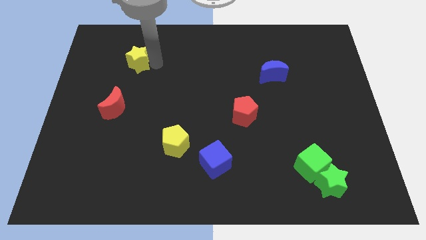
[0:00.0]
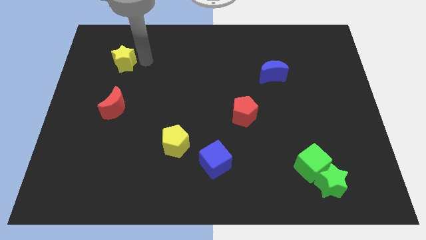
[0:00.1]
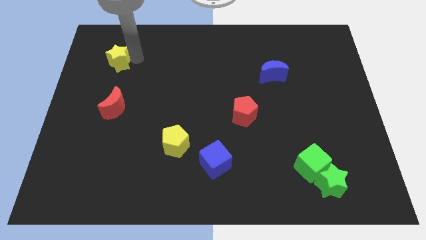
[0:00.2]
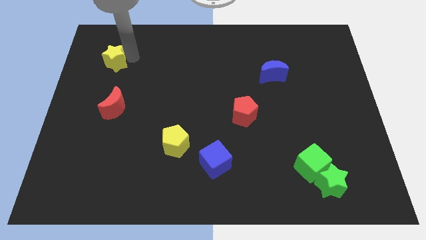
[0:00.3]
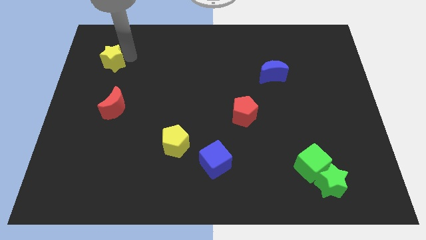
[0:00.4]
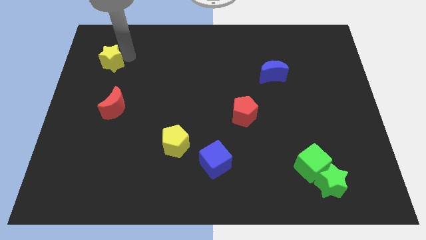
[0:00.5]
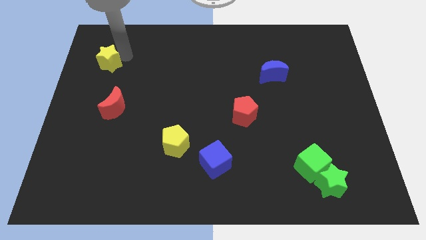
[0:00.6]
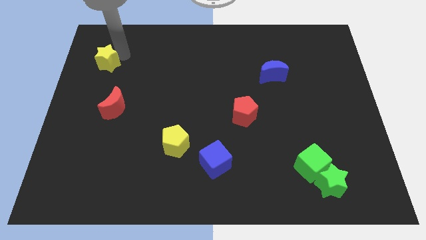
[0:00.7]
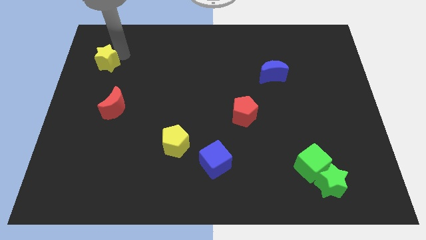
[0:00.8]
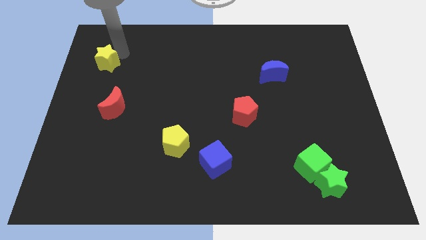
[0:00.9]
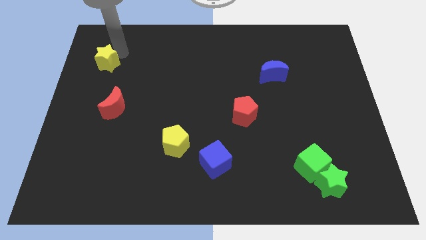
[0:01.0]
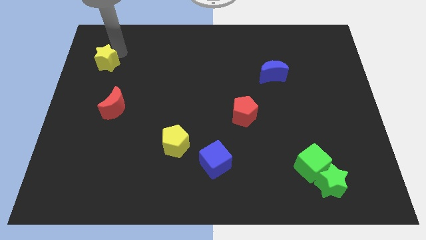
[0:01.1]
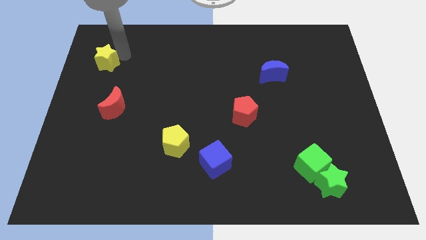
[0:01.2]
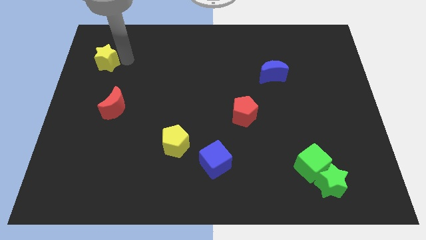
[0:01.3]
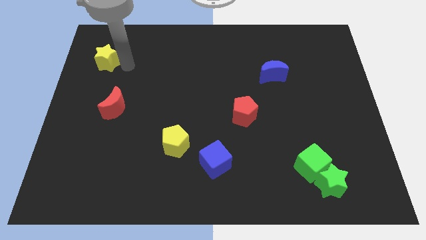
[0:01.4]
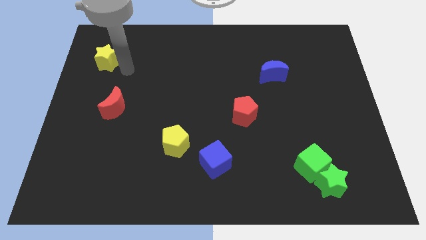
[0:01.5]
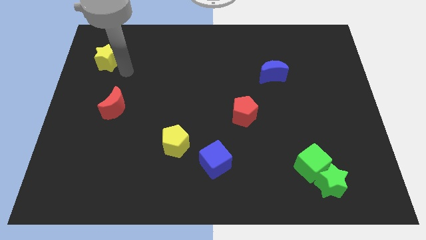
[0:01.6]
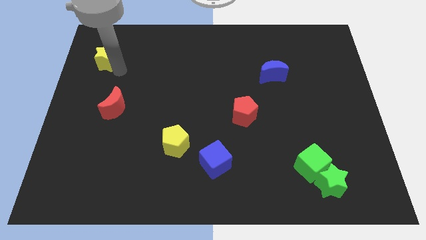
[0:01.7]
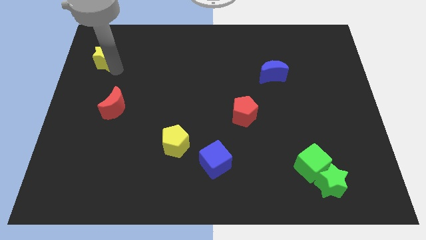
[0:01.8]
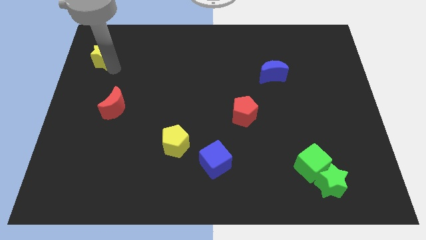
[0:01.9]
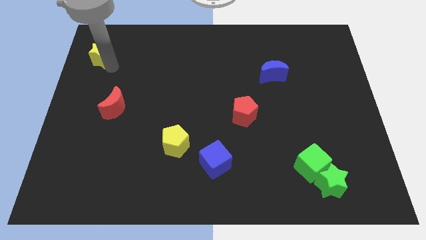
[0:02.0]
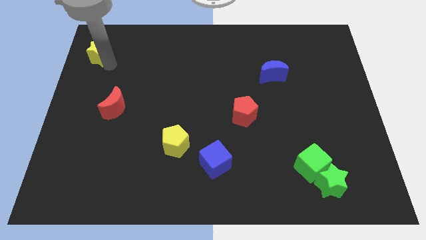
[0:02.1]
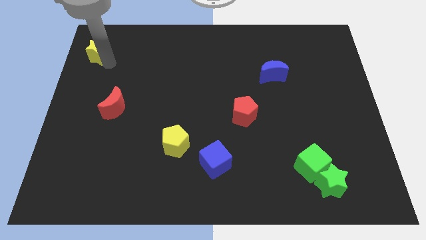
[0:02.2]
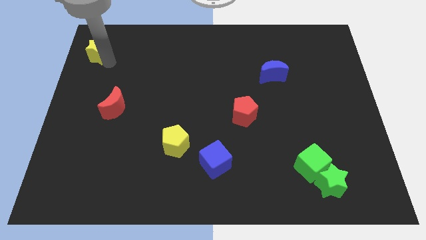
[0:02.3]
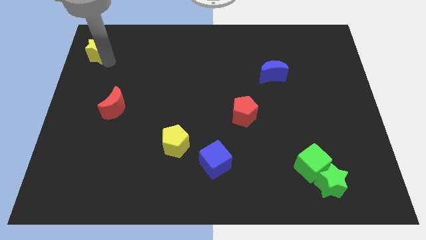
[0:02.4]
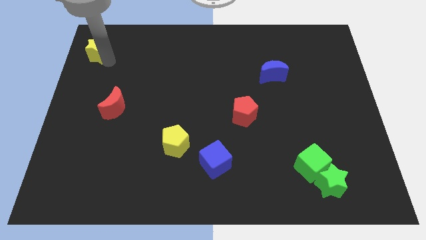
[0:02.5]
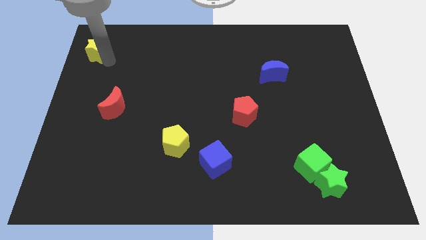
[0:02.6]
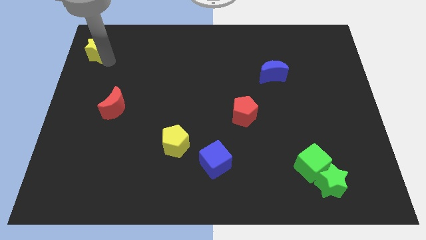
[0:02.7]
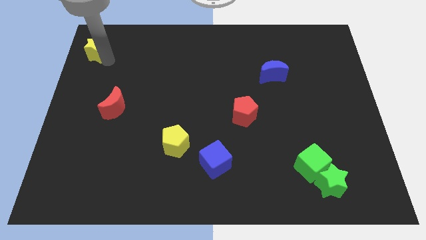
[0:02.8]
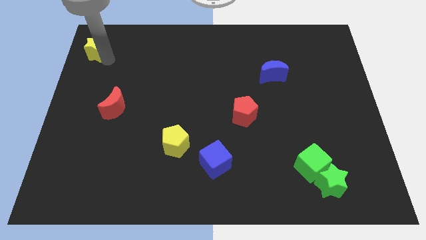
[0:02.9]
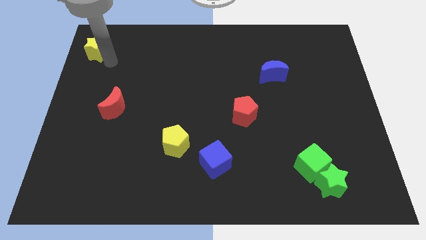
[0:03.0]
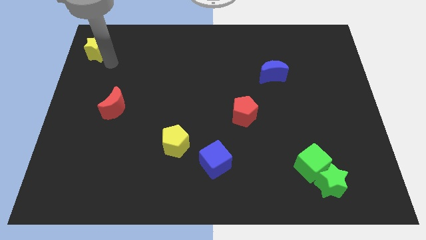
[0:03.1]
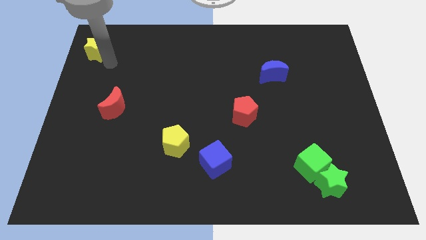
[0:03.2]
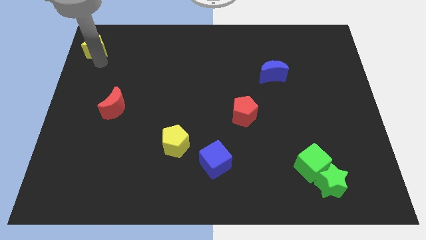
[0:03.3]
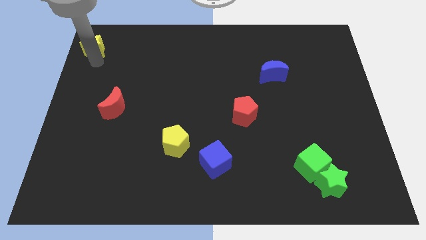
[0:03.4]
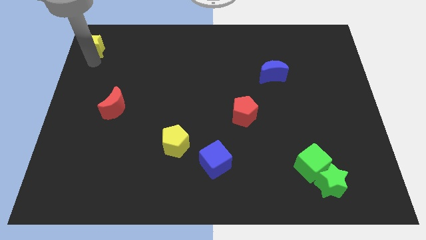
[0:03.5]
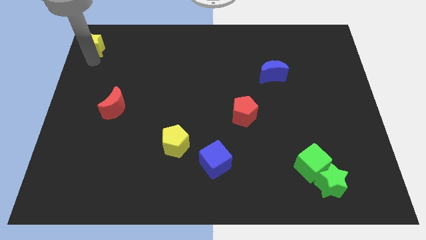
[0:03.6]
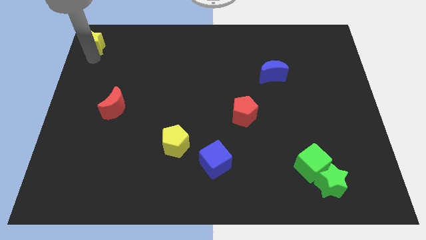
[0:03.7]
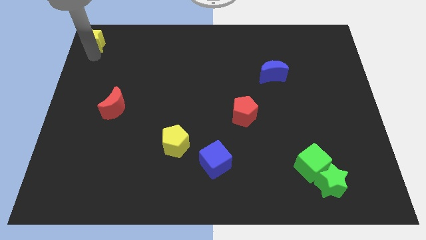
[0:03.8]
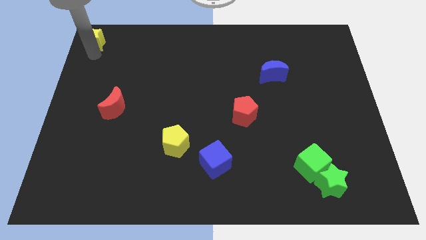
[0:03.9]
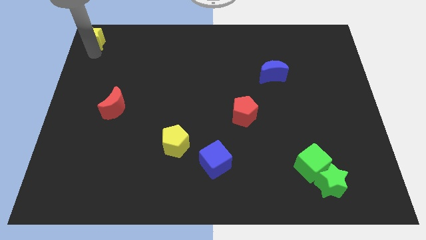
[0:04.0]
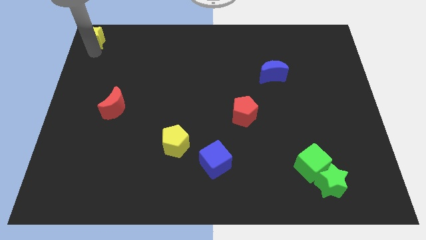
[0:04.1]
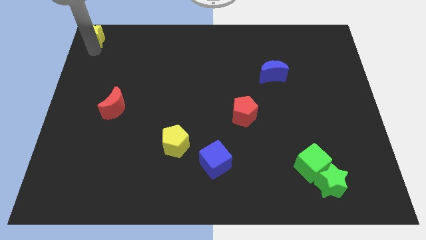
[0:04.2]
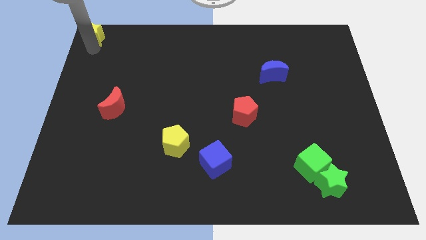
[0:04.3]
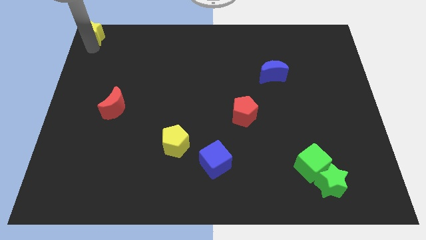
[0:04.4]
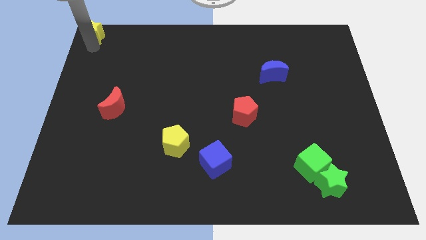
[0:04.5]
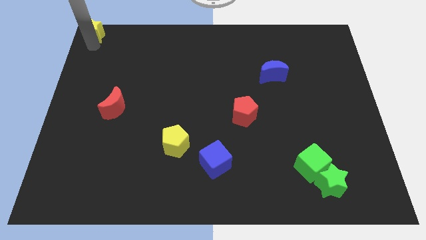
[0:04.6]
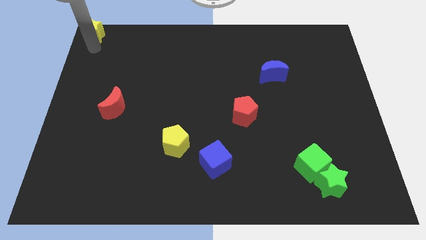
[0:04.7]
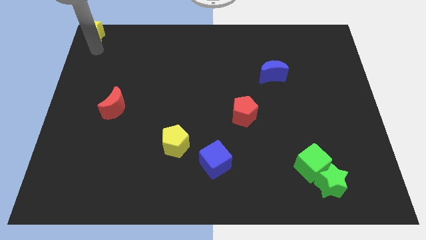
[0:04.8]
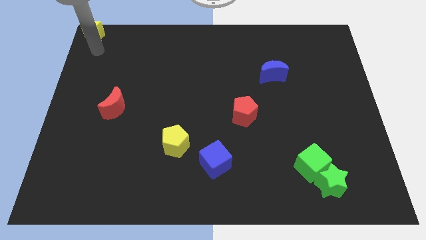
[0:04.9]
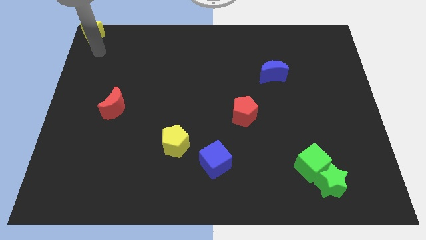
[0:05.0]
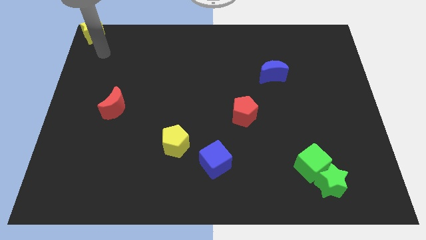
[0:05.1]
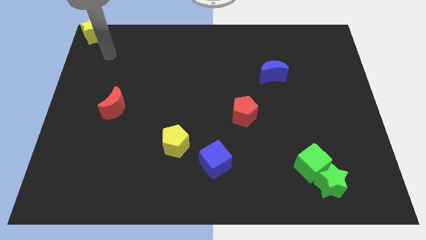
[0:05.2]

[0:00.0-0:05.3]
move the yellow star to the top left corner

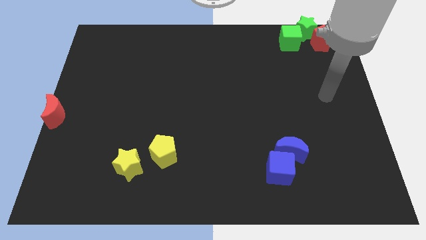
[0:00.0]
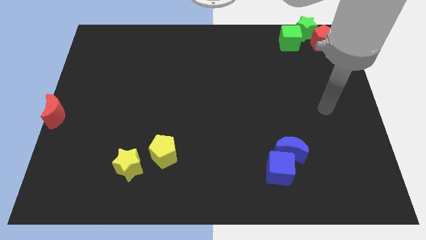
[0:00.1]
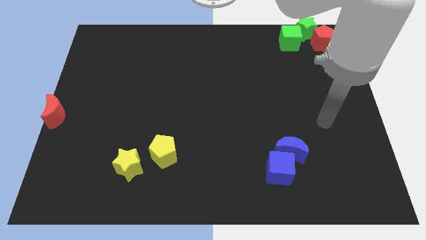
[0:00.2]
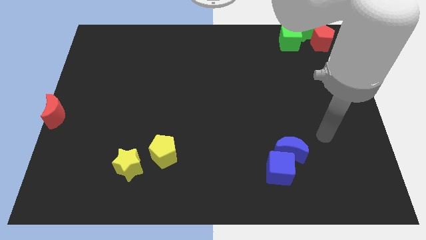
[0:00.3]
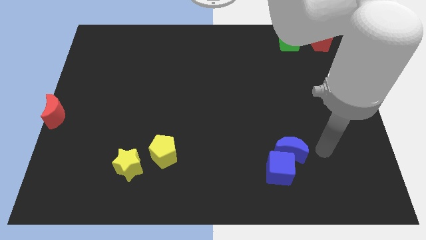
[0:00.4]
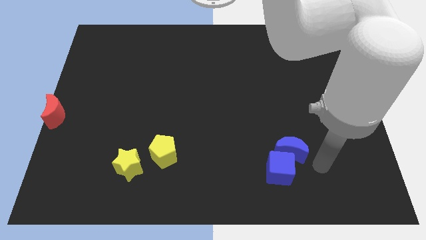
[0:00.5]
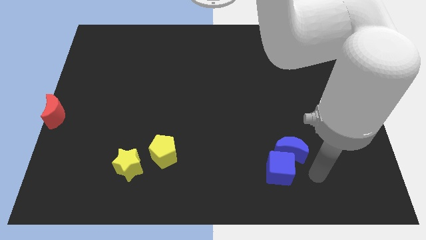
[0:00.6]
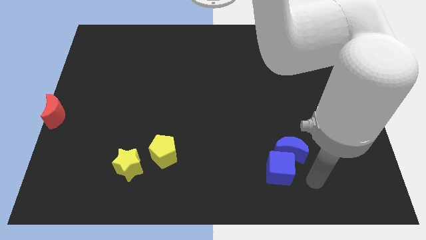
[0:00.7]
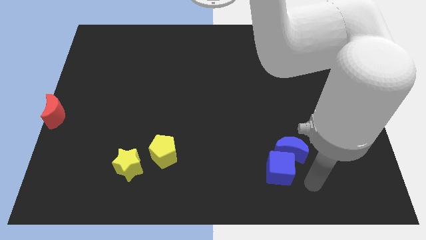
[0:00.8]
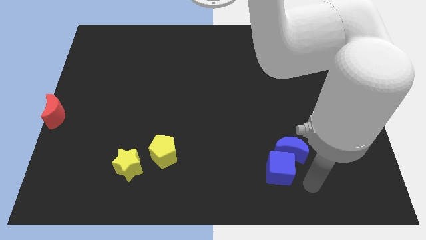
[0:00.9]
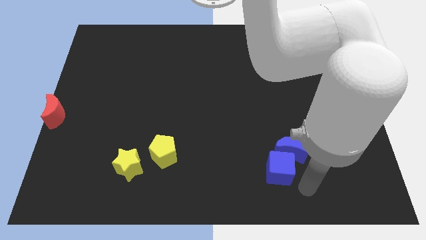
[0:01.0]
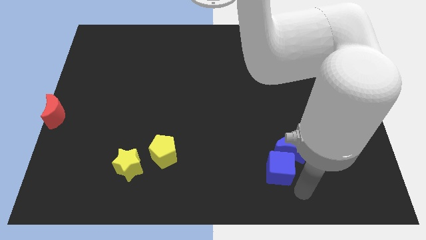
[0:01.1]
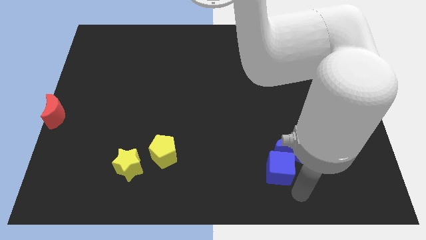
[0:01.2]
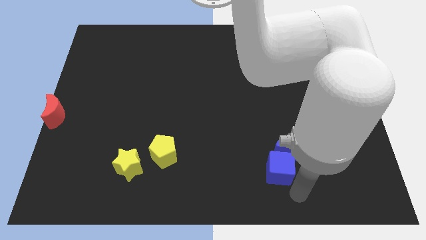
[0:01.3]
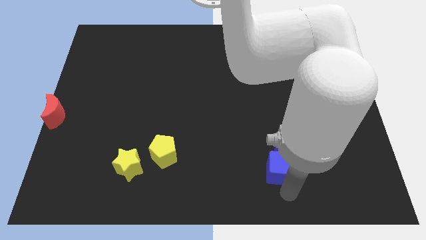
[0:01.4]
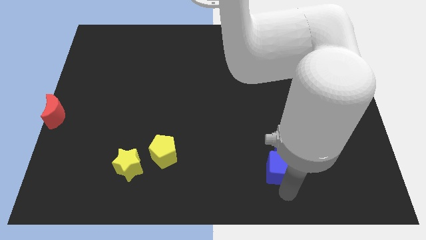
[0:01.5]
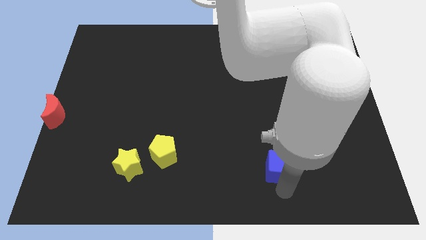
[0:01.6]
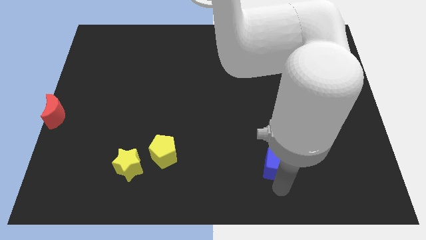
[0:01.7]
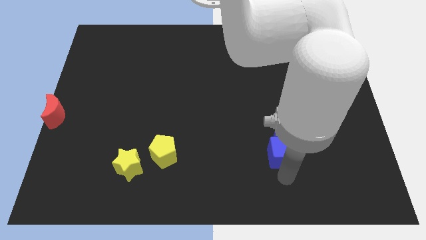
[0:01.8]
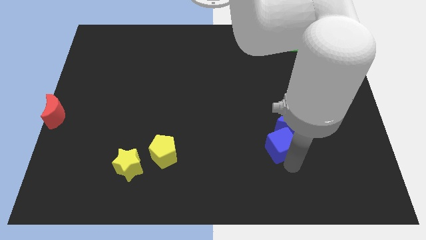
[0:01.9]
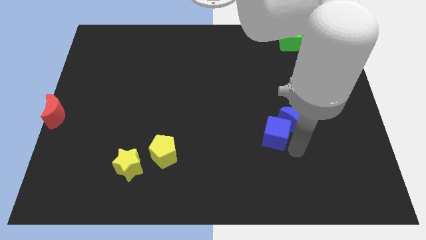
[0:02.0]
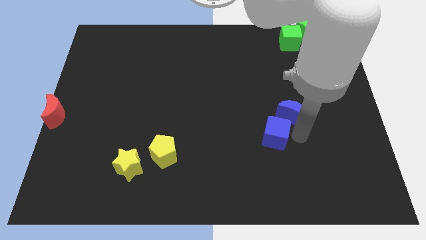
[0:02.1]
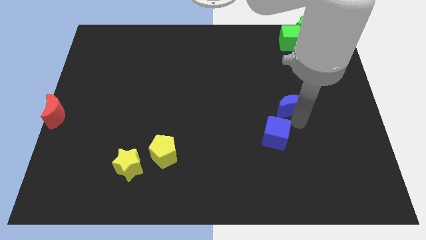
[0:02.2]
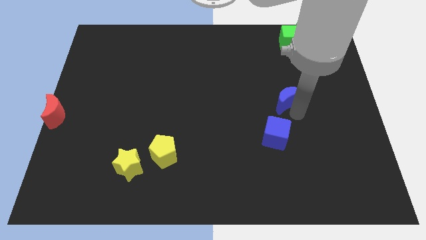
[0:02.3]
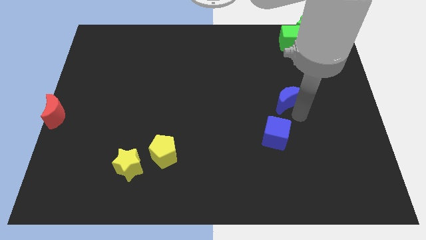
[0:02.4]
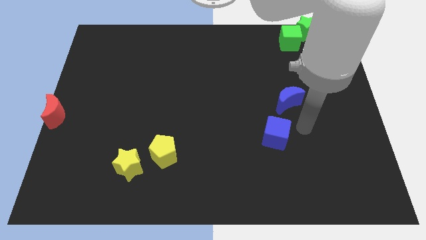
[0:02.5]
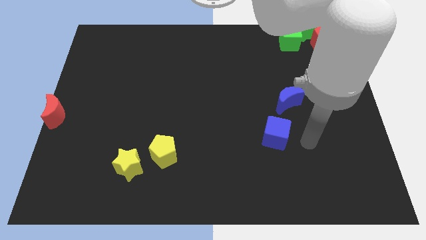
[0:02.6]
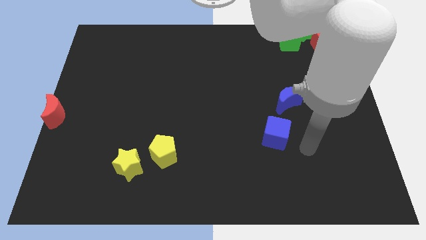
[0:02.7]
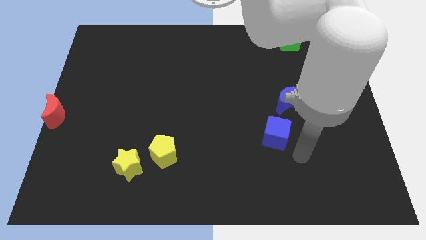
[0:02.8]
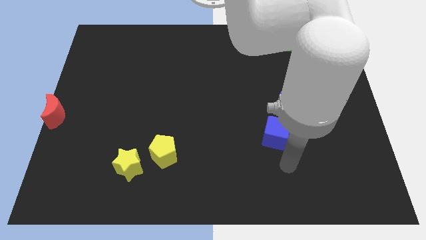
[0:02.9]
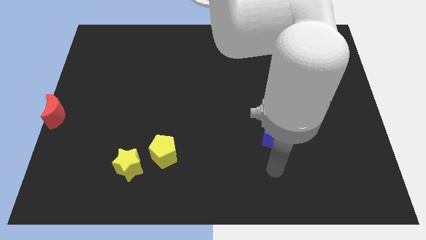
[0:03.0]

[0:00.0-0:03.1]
separate the blue cube and blue moon

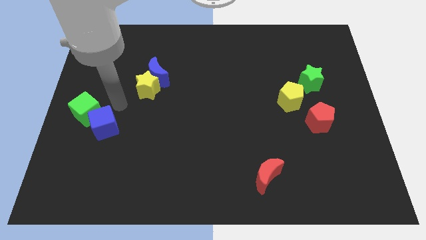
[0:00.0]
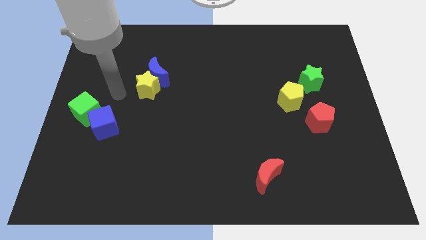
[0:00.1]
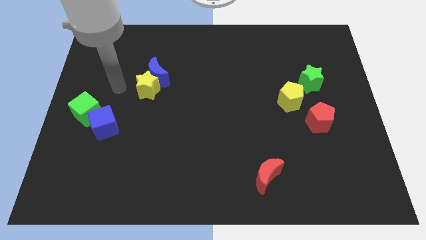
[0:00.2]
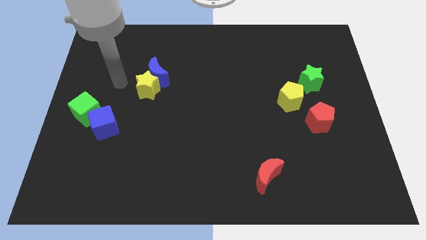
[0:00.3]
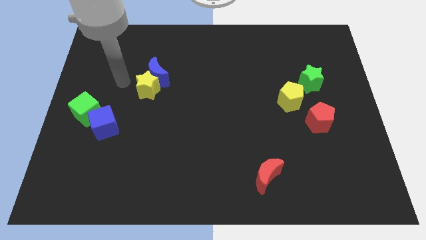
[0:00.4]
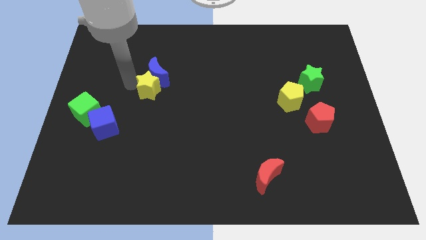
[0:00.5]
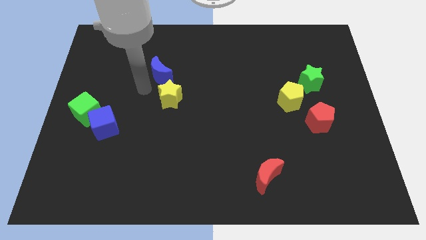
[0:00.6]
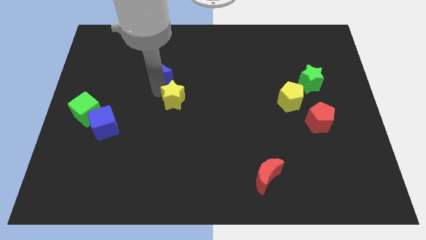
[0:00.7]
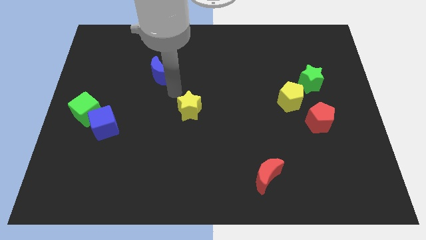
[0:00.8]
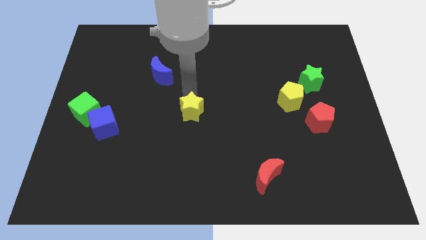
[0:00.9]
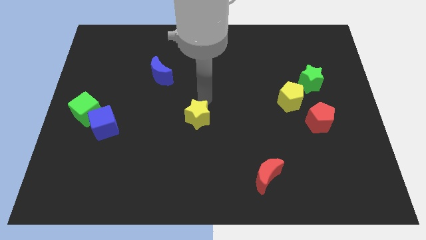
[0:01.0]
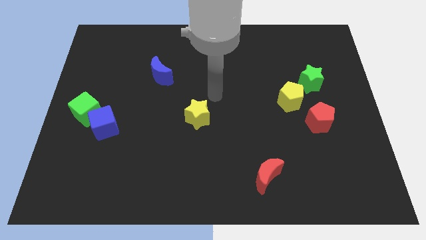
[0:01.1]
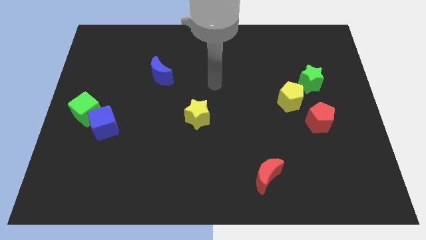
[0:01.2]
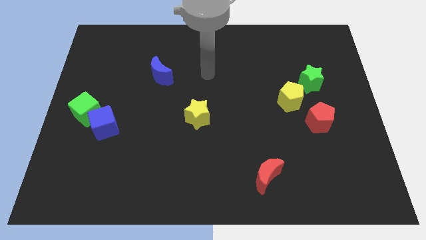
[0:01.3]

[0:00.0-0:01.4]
place the yellow star in between blue cube and red pentagon
